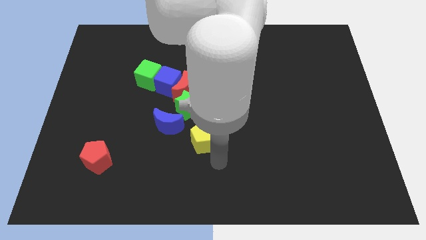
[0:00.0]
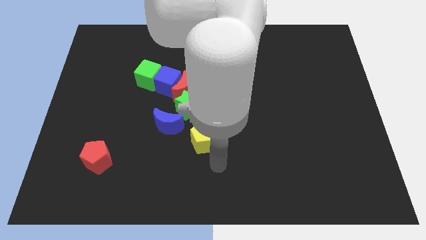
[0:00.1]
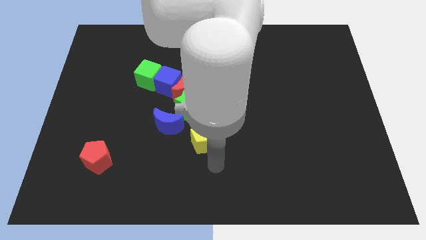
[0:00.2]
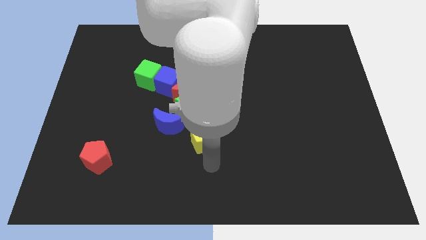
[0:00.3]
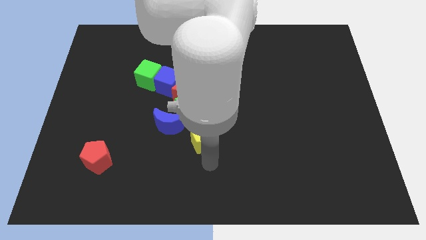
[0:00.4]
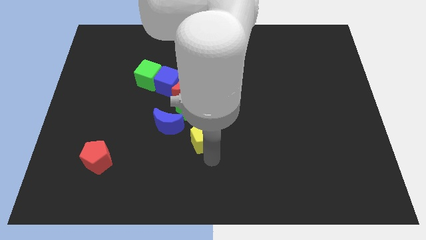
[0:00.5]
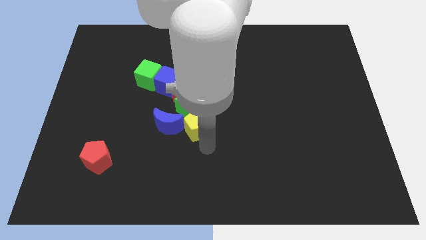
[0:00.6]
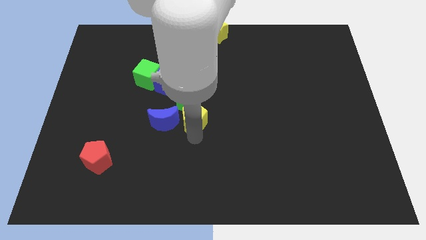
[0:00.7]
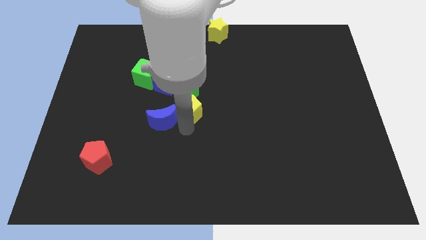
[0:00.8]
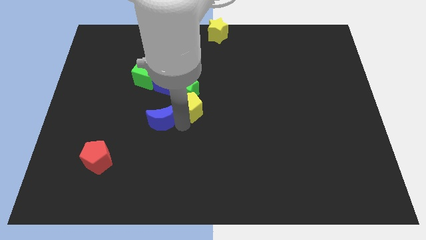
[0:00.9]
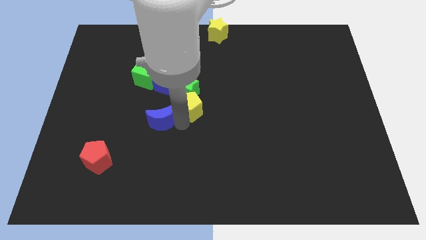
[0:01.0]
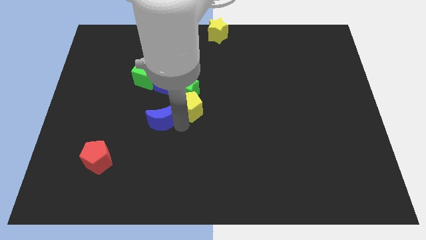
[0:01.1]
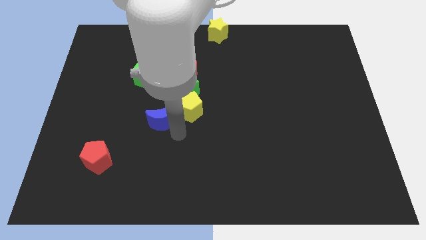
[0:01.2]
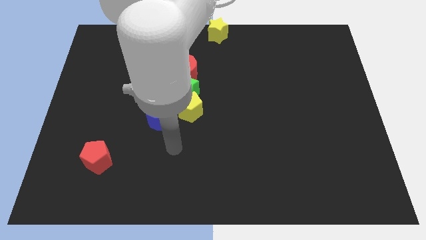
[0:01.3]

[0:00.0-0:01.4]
push the yellow pentagon towards the green star

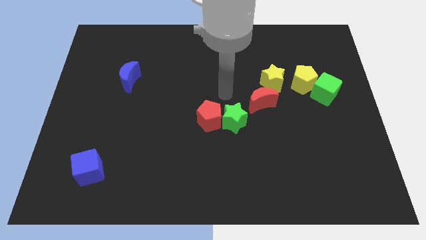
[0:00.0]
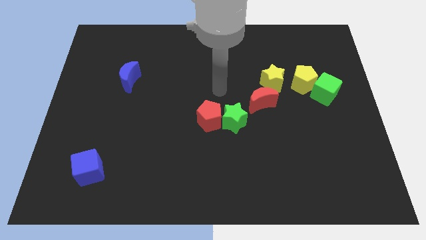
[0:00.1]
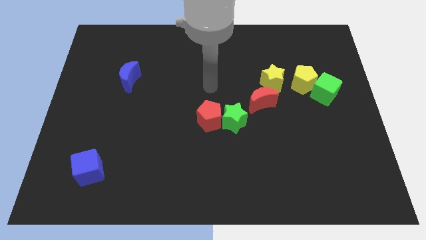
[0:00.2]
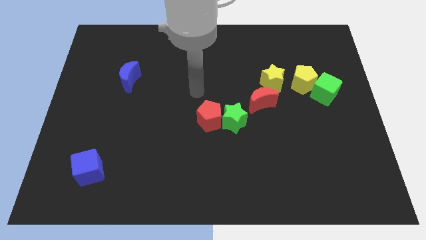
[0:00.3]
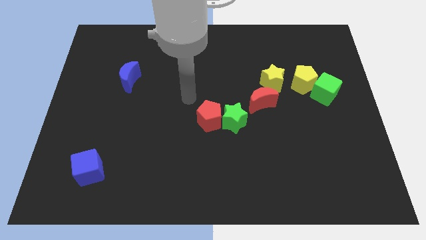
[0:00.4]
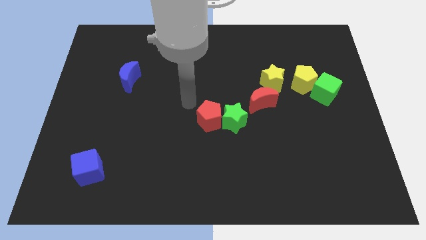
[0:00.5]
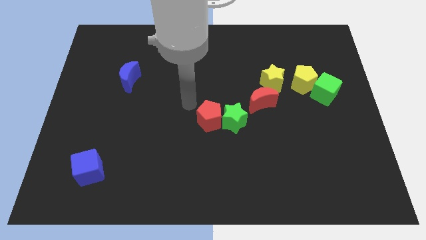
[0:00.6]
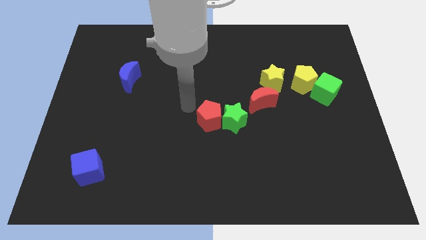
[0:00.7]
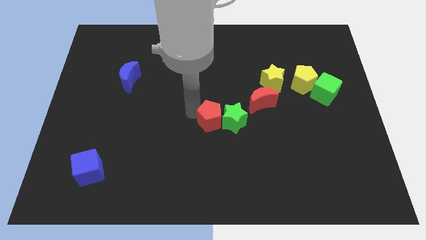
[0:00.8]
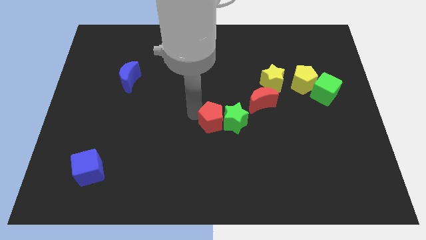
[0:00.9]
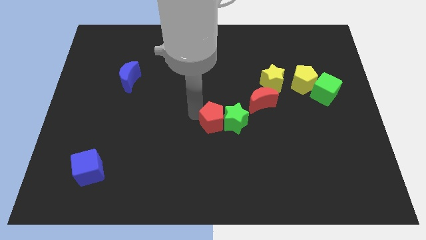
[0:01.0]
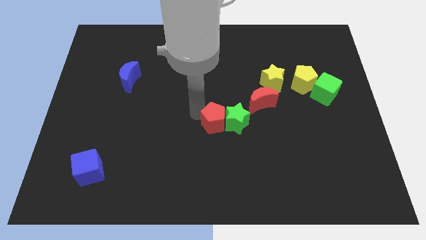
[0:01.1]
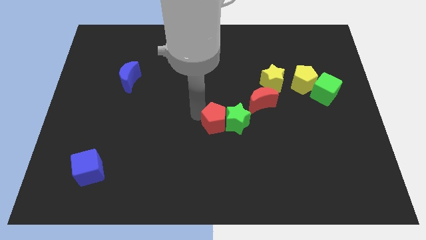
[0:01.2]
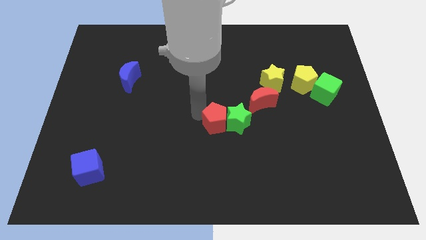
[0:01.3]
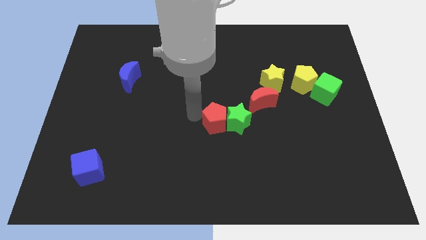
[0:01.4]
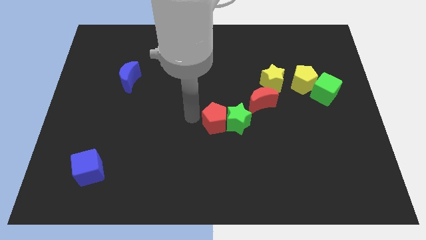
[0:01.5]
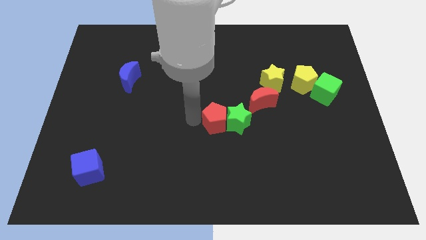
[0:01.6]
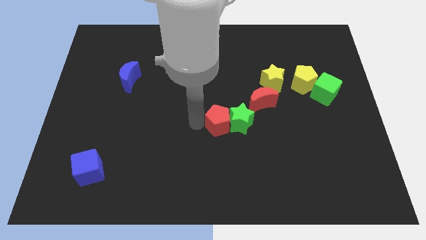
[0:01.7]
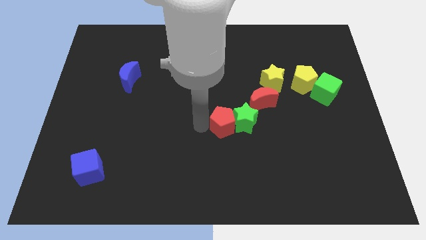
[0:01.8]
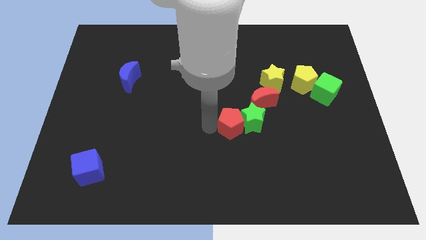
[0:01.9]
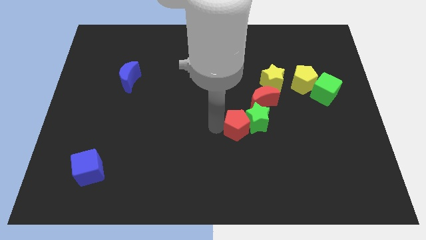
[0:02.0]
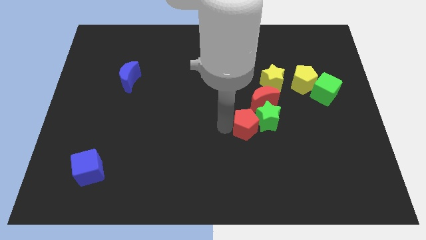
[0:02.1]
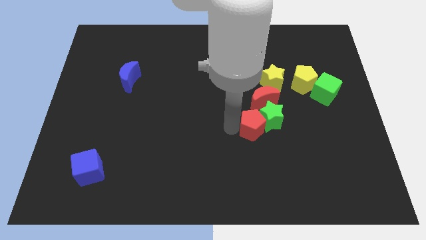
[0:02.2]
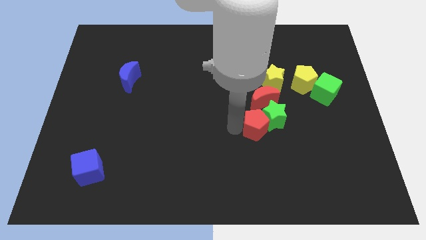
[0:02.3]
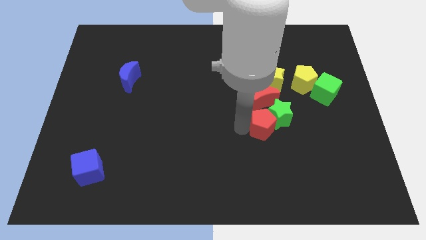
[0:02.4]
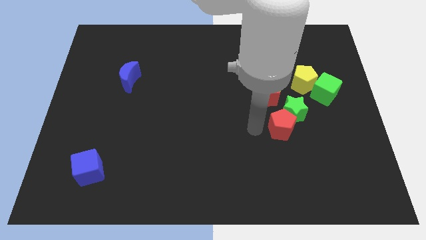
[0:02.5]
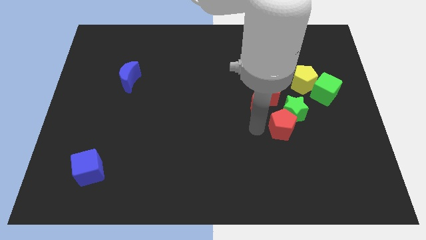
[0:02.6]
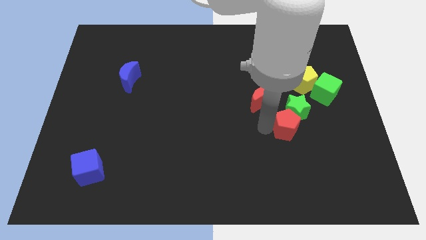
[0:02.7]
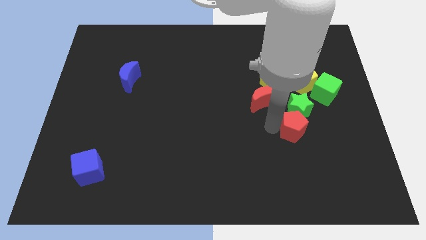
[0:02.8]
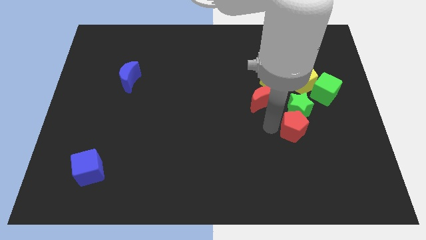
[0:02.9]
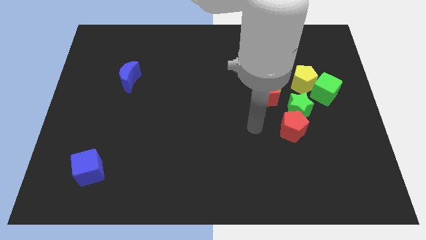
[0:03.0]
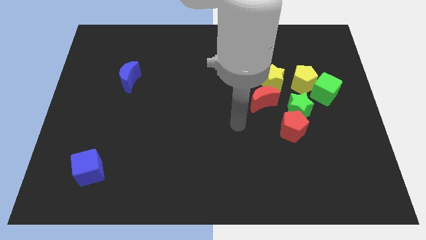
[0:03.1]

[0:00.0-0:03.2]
push the red pentagon along with the green star to the bottom of the yellow pentagon

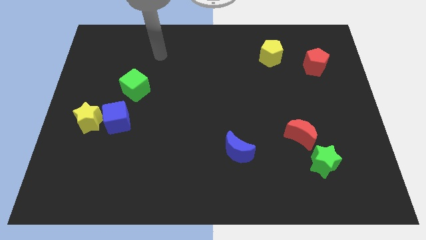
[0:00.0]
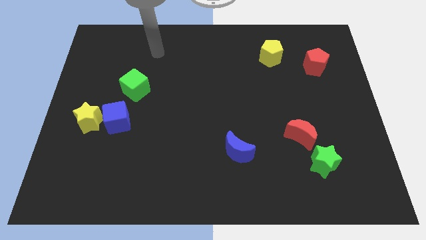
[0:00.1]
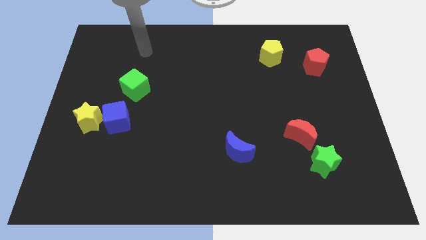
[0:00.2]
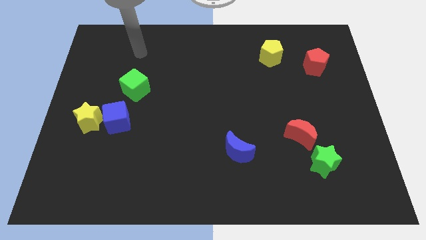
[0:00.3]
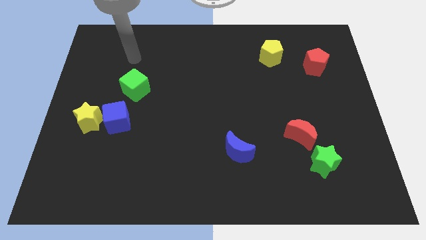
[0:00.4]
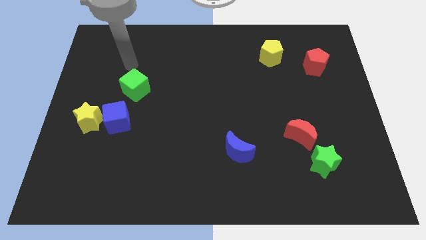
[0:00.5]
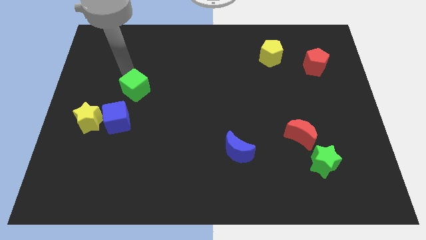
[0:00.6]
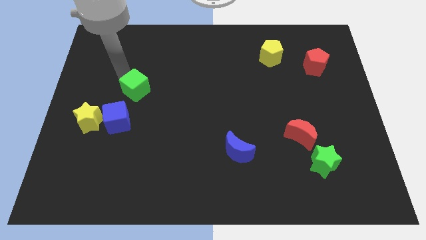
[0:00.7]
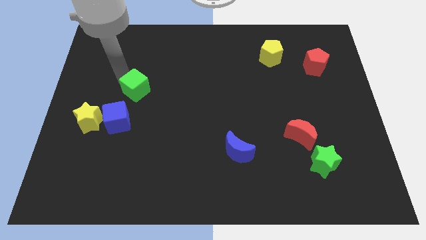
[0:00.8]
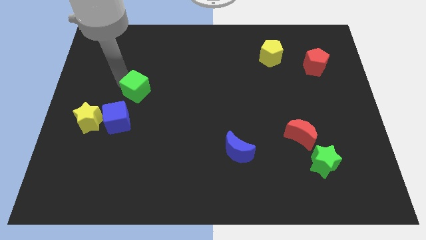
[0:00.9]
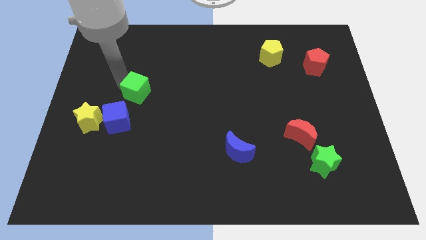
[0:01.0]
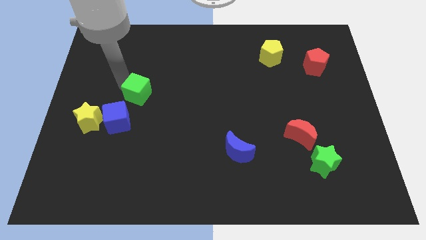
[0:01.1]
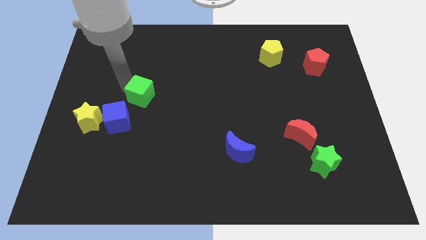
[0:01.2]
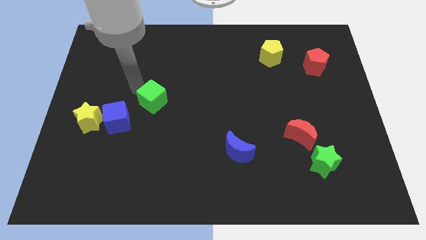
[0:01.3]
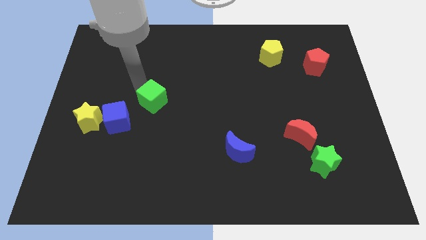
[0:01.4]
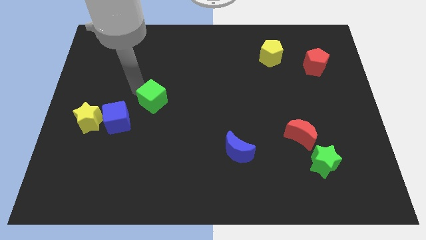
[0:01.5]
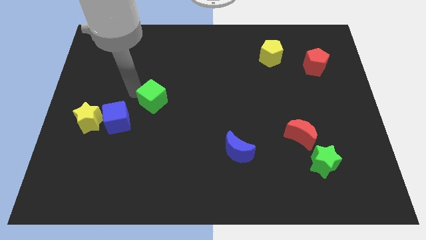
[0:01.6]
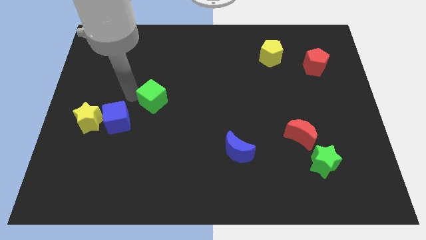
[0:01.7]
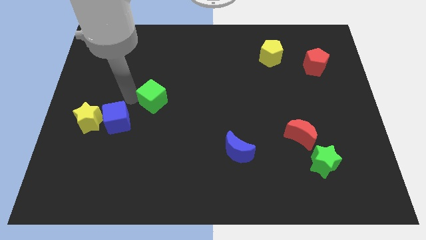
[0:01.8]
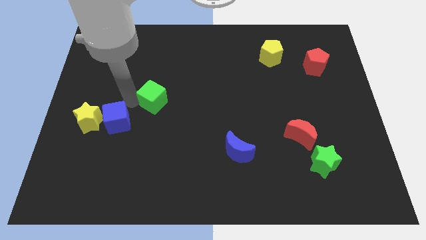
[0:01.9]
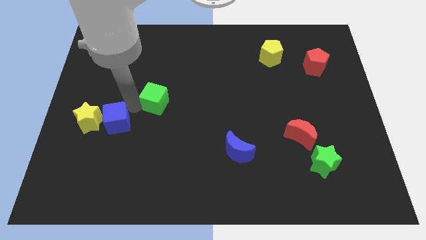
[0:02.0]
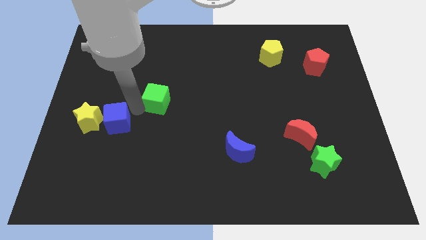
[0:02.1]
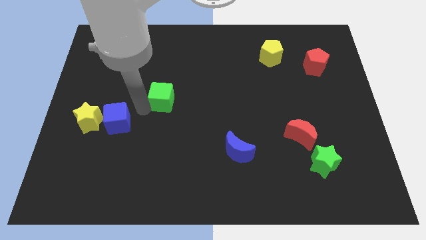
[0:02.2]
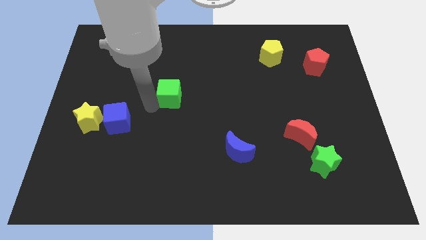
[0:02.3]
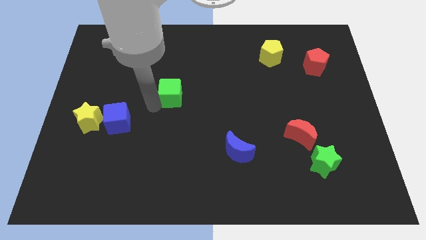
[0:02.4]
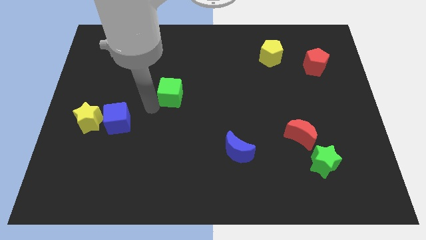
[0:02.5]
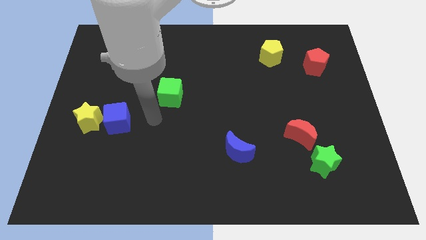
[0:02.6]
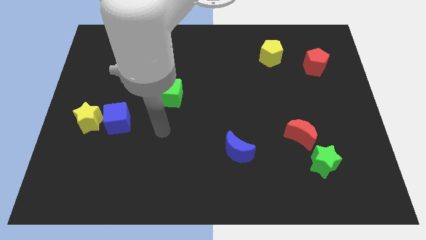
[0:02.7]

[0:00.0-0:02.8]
slightly move the green cube to the right side

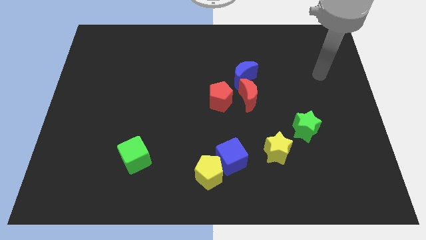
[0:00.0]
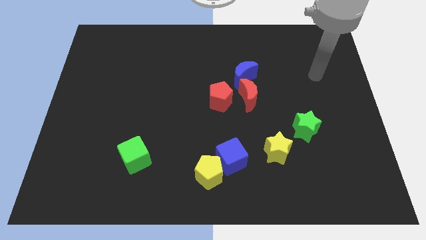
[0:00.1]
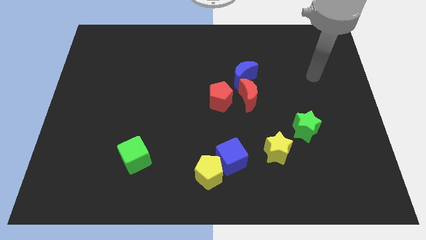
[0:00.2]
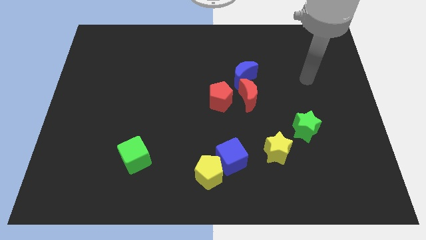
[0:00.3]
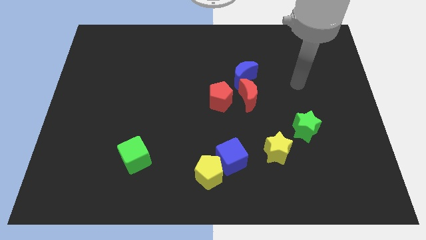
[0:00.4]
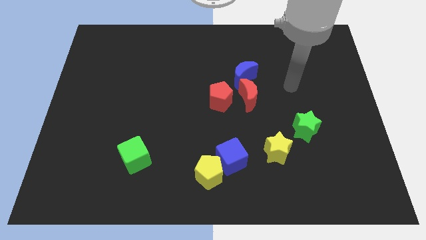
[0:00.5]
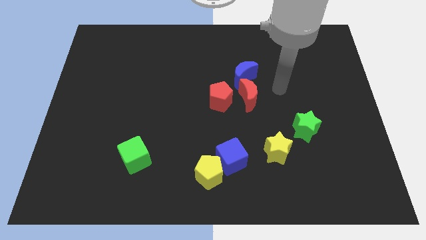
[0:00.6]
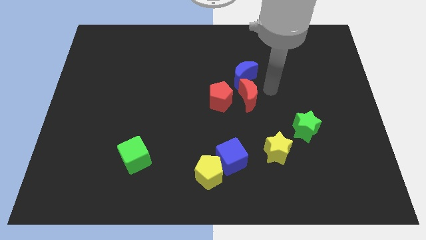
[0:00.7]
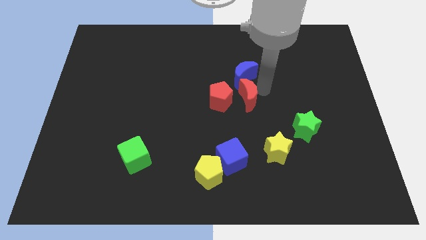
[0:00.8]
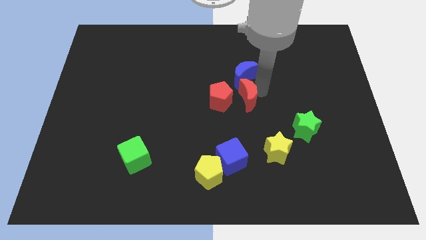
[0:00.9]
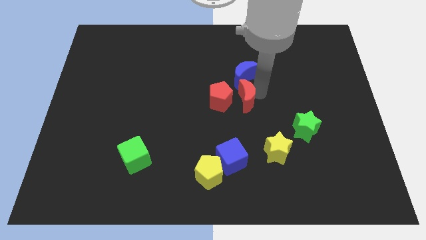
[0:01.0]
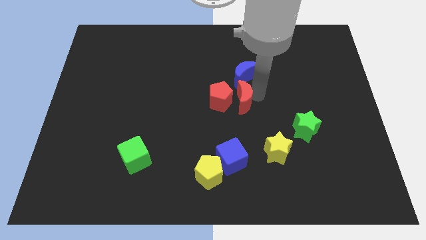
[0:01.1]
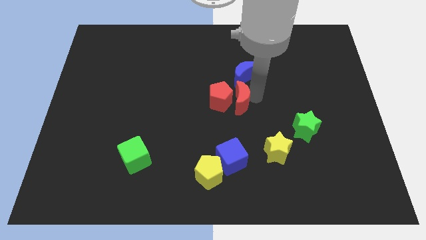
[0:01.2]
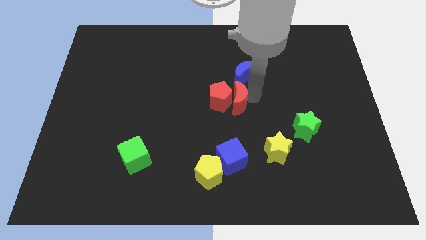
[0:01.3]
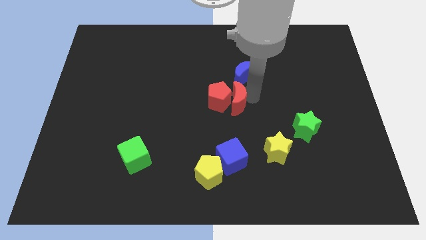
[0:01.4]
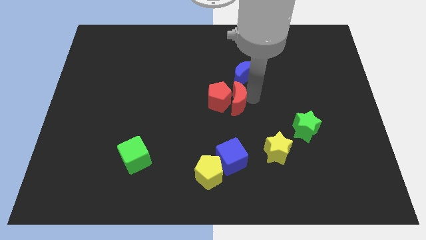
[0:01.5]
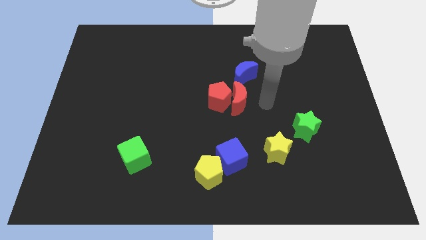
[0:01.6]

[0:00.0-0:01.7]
push the red crescent into the red pentagon
